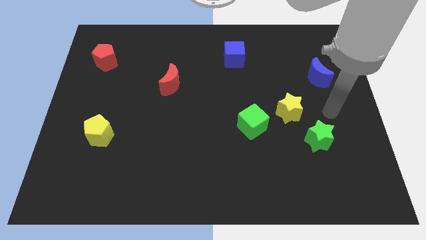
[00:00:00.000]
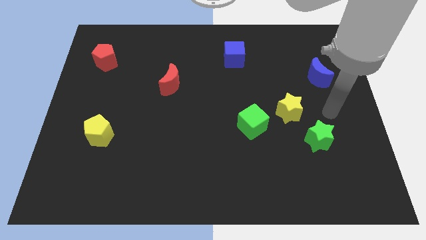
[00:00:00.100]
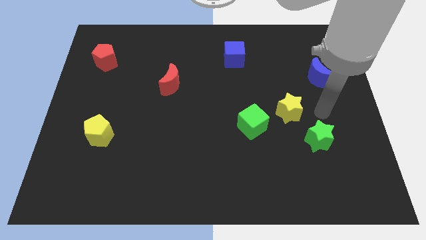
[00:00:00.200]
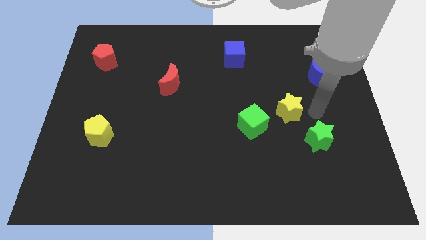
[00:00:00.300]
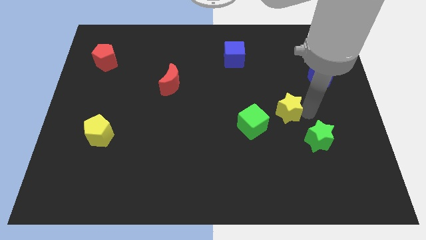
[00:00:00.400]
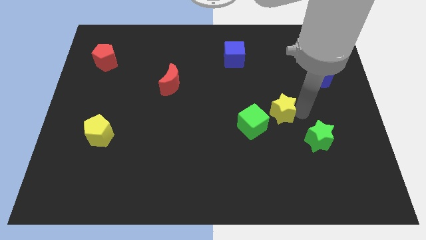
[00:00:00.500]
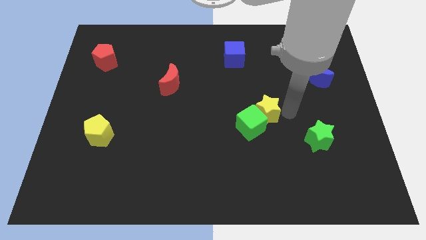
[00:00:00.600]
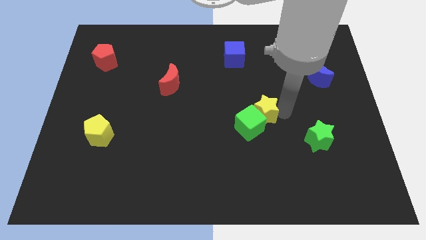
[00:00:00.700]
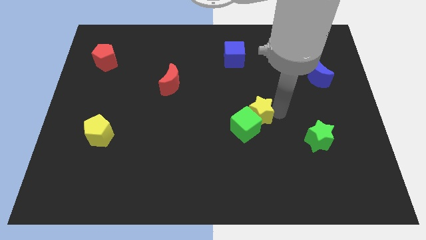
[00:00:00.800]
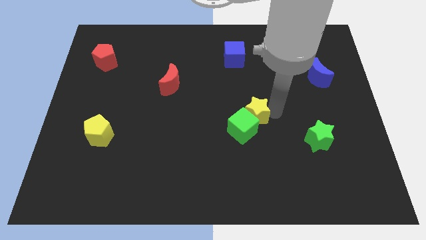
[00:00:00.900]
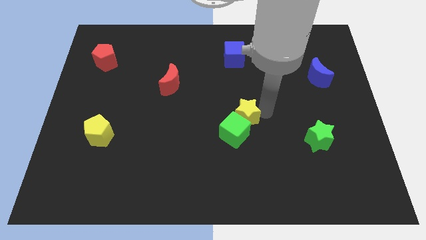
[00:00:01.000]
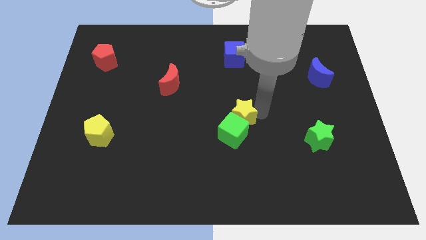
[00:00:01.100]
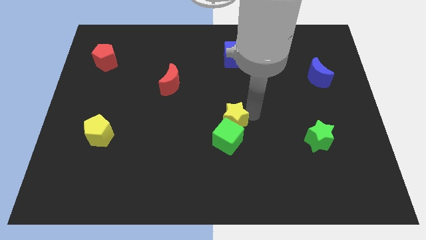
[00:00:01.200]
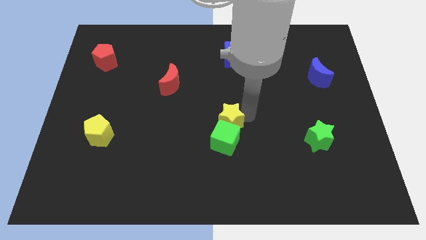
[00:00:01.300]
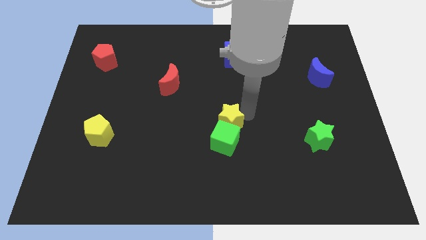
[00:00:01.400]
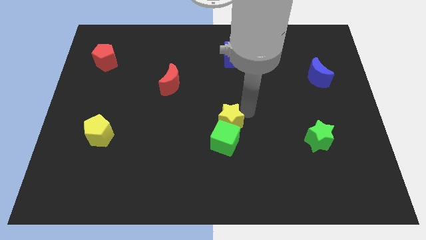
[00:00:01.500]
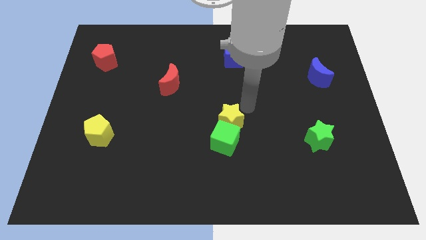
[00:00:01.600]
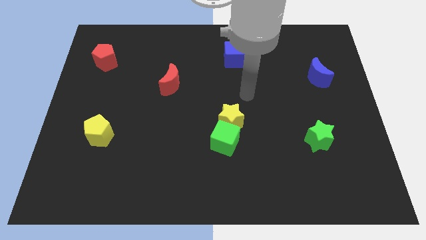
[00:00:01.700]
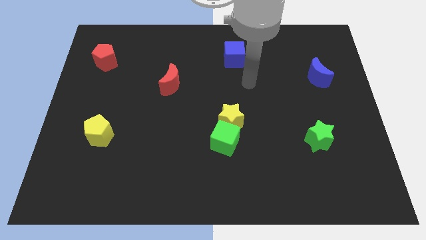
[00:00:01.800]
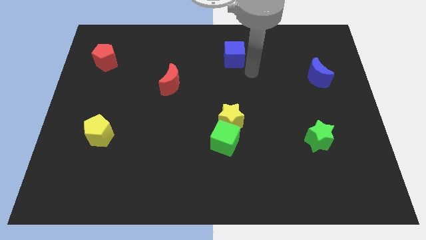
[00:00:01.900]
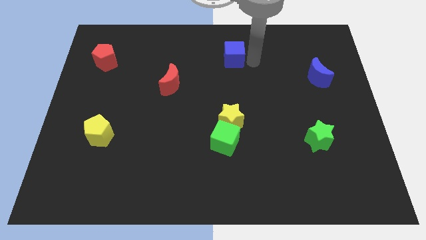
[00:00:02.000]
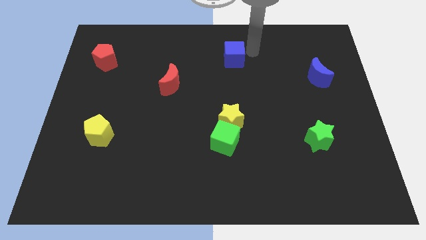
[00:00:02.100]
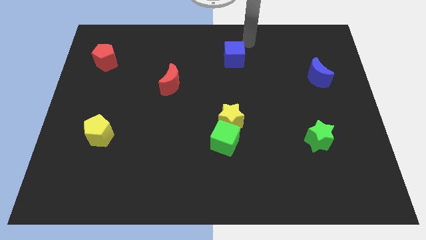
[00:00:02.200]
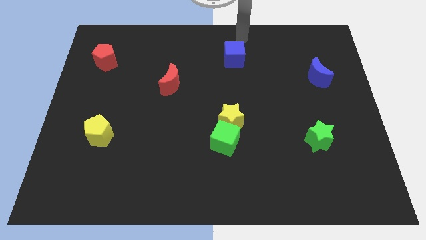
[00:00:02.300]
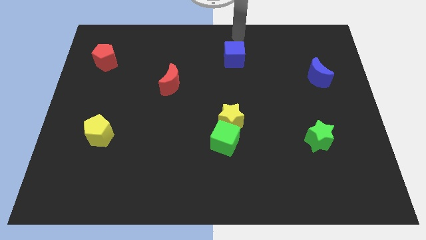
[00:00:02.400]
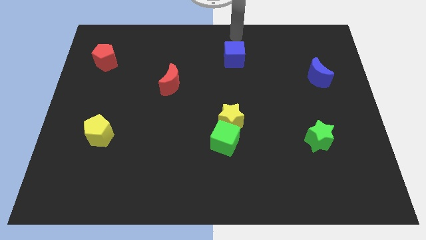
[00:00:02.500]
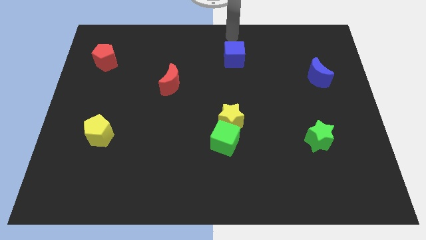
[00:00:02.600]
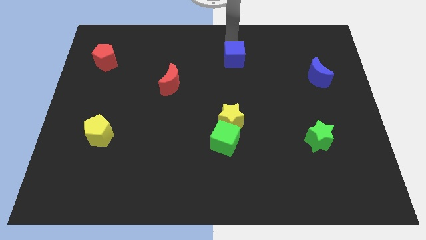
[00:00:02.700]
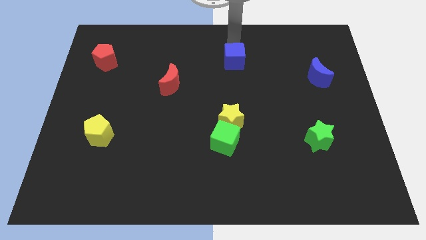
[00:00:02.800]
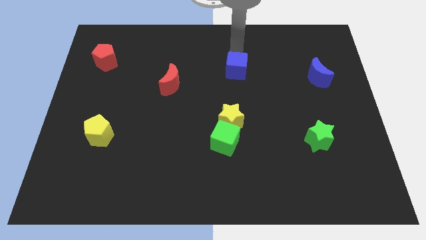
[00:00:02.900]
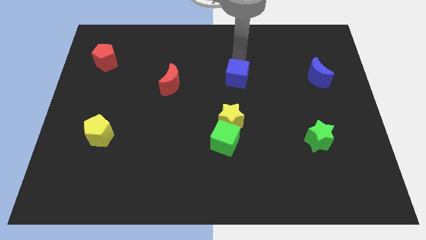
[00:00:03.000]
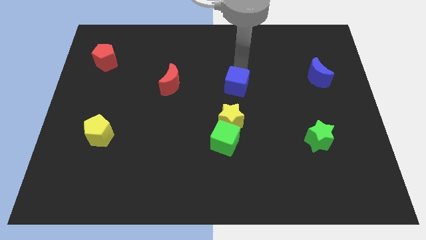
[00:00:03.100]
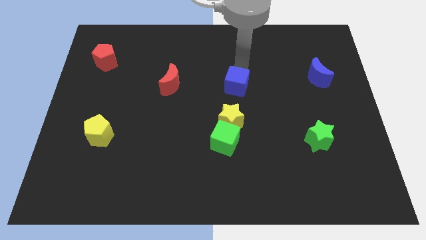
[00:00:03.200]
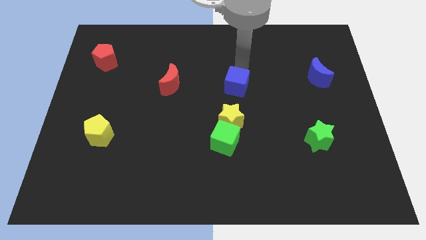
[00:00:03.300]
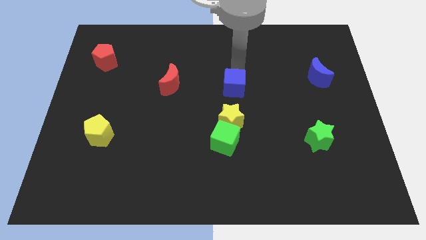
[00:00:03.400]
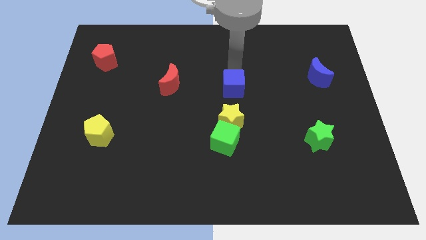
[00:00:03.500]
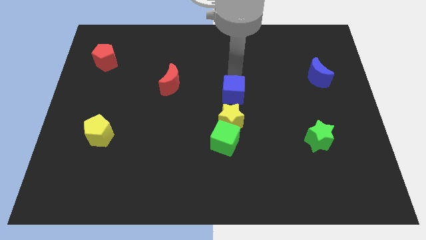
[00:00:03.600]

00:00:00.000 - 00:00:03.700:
push the yellow star into the green cube

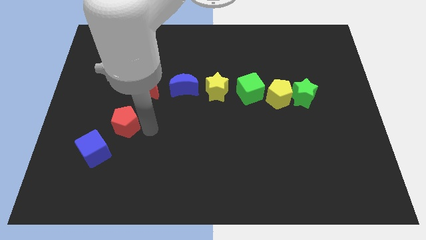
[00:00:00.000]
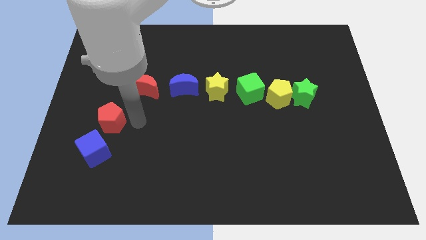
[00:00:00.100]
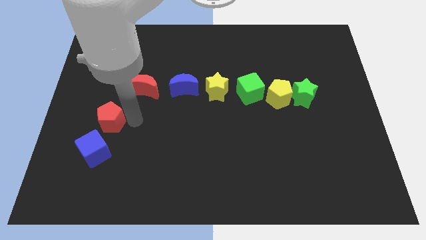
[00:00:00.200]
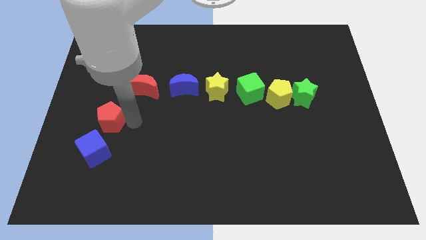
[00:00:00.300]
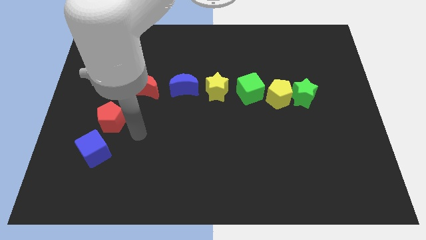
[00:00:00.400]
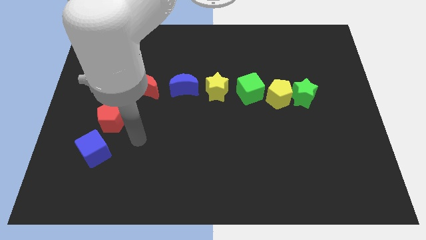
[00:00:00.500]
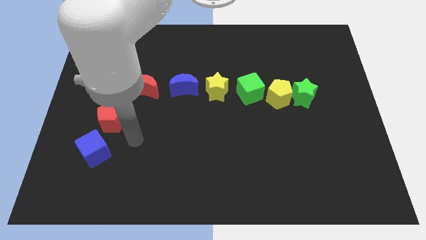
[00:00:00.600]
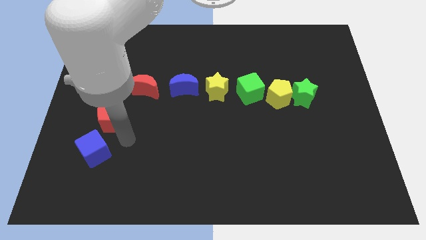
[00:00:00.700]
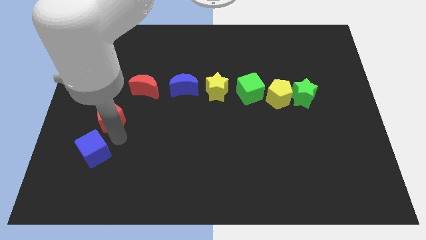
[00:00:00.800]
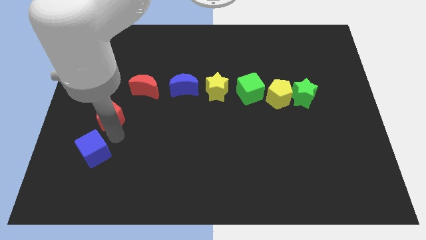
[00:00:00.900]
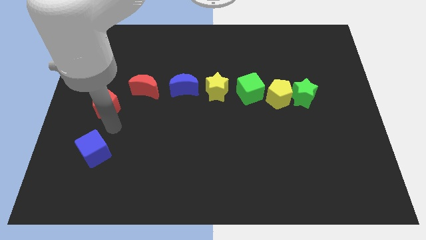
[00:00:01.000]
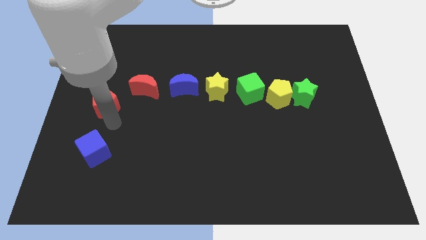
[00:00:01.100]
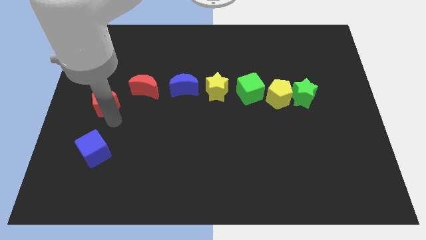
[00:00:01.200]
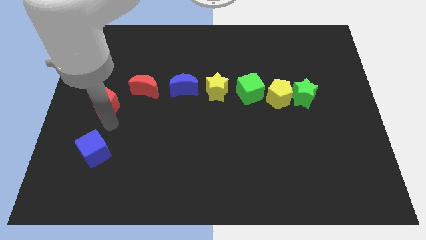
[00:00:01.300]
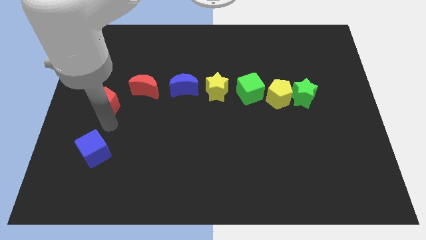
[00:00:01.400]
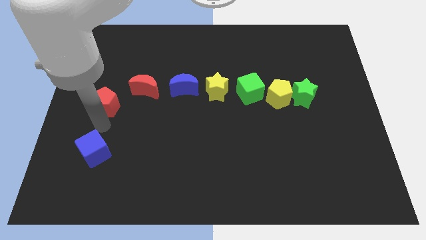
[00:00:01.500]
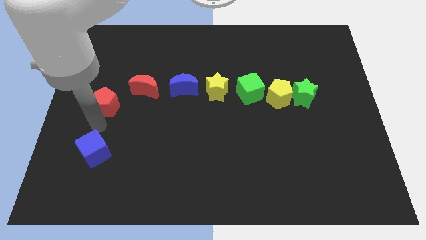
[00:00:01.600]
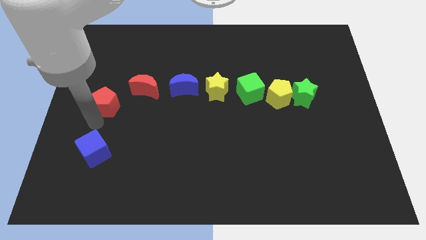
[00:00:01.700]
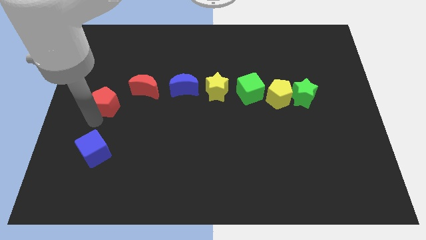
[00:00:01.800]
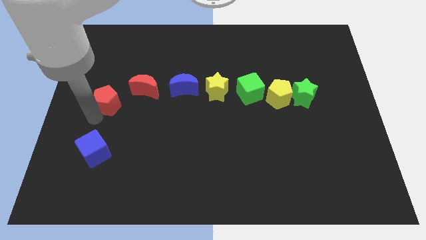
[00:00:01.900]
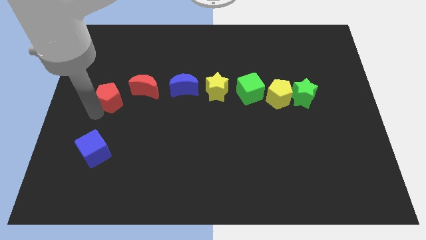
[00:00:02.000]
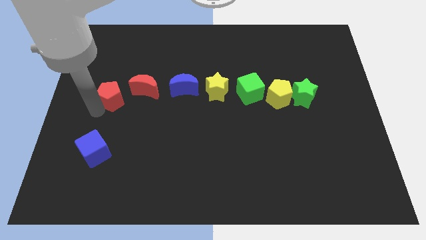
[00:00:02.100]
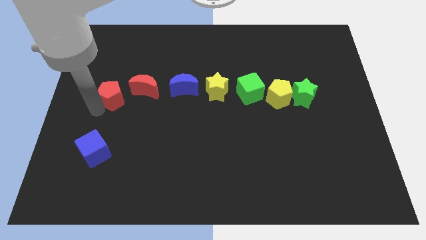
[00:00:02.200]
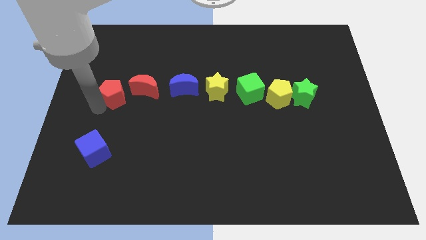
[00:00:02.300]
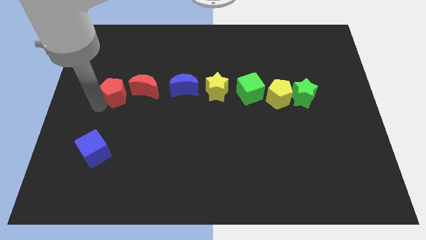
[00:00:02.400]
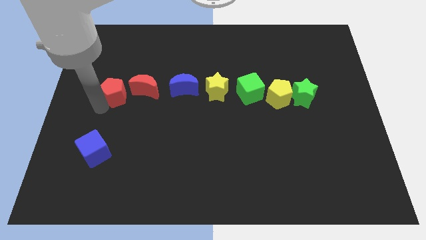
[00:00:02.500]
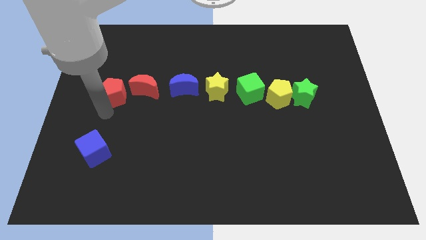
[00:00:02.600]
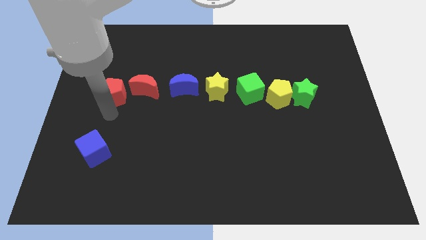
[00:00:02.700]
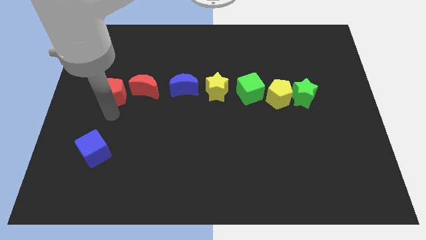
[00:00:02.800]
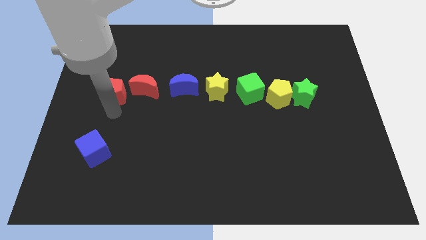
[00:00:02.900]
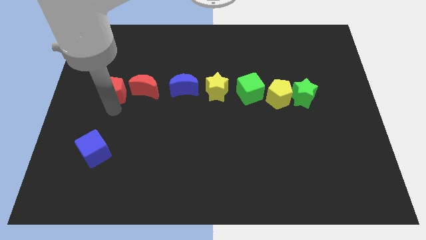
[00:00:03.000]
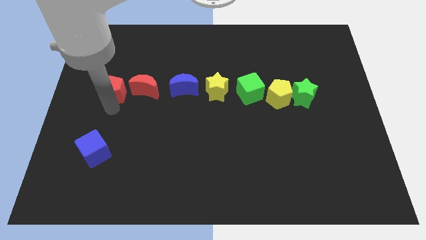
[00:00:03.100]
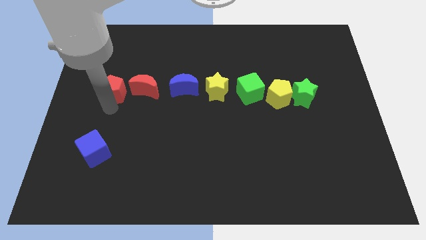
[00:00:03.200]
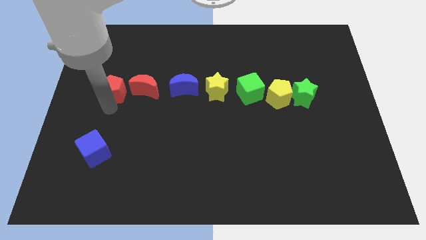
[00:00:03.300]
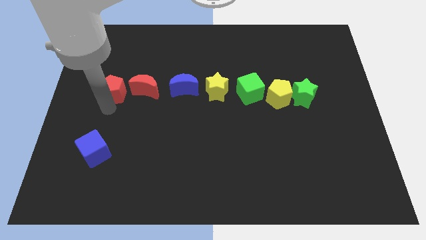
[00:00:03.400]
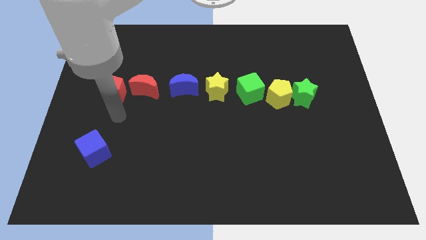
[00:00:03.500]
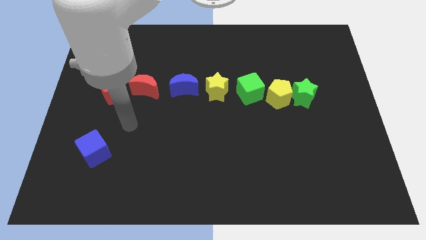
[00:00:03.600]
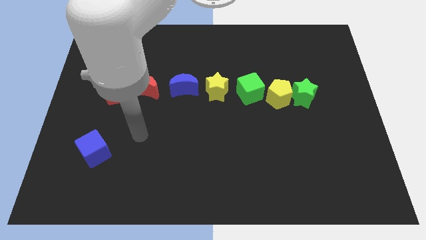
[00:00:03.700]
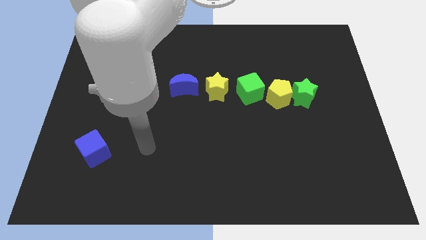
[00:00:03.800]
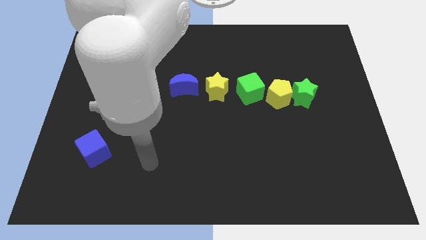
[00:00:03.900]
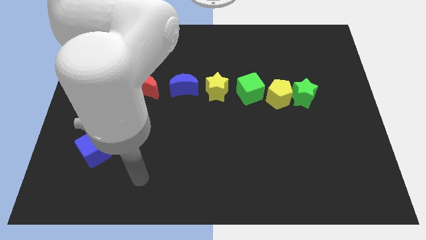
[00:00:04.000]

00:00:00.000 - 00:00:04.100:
push the red pentagon to the left of red crescent

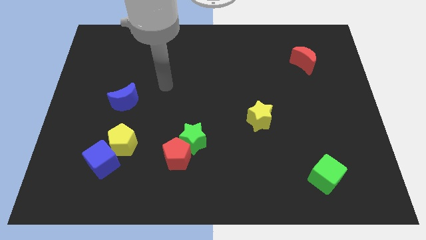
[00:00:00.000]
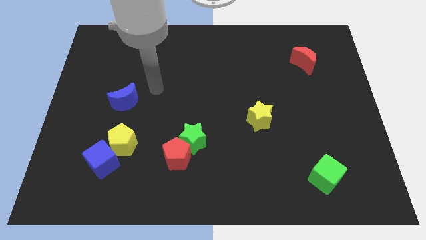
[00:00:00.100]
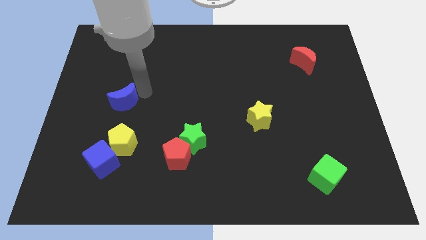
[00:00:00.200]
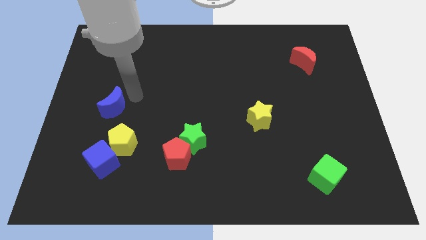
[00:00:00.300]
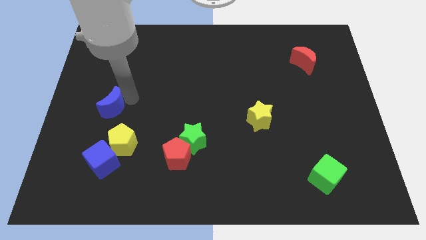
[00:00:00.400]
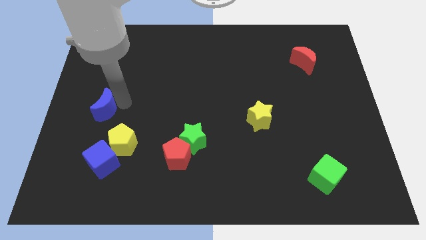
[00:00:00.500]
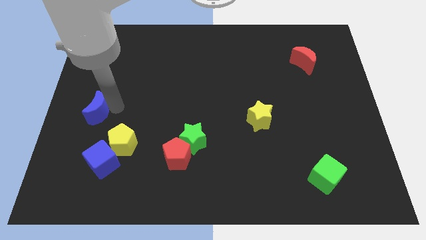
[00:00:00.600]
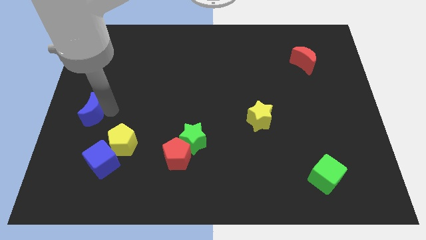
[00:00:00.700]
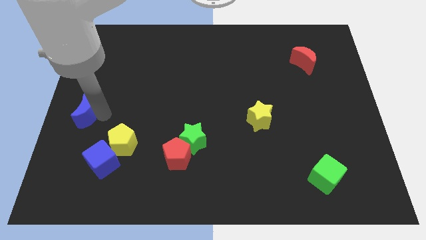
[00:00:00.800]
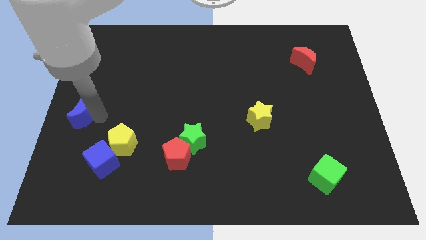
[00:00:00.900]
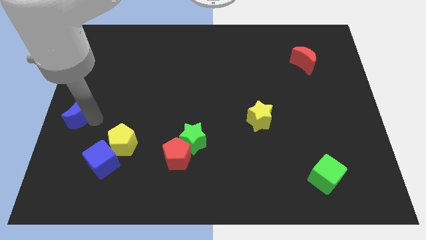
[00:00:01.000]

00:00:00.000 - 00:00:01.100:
push the blue moon to the left side of the board
